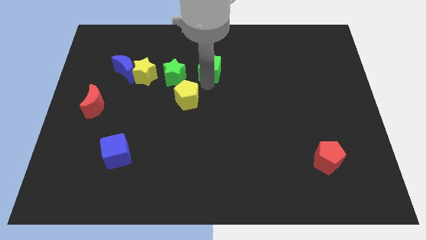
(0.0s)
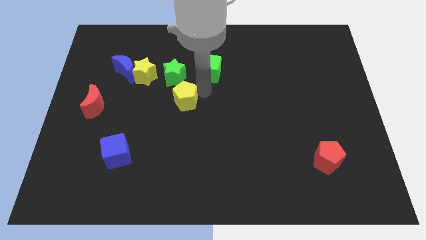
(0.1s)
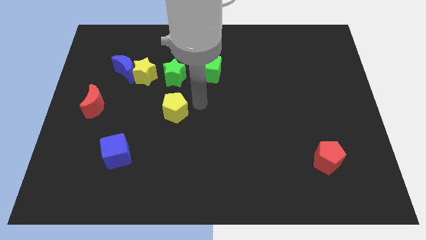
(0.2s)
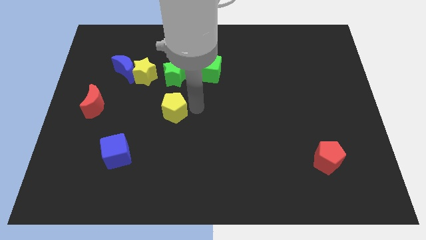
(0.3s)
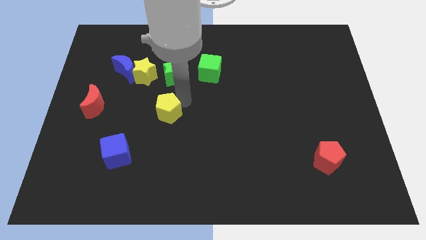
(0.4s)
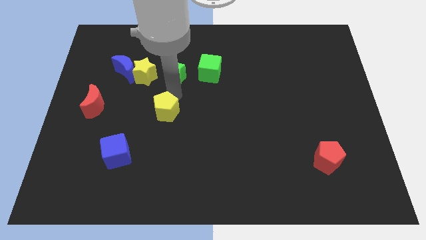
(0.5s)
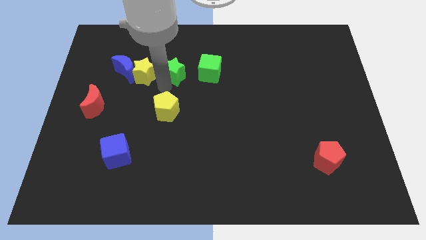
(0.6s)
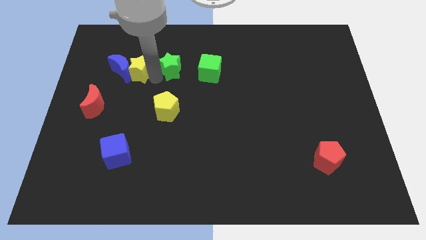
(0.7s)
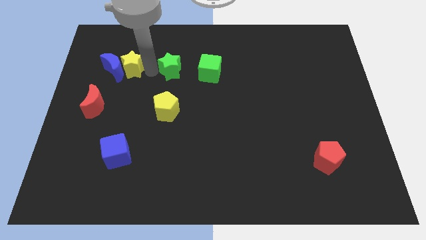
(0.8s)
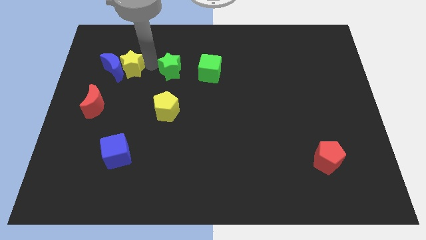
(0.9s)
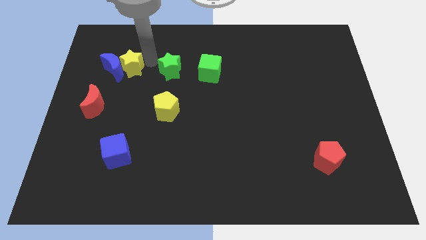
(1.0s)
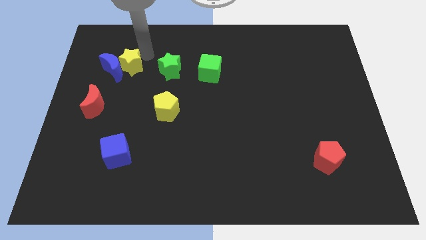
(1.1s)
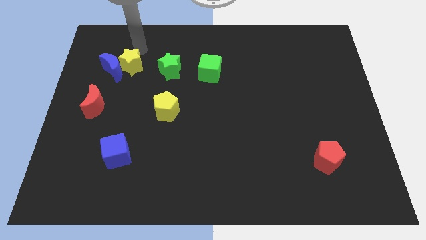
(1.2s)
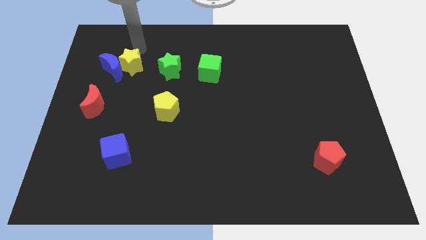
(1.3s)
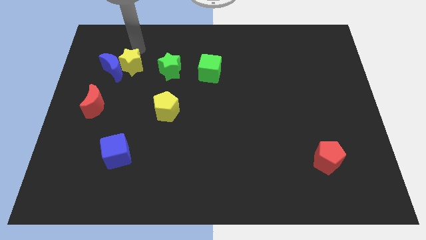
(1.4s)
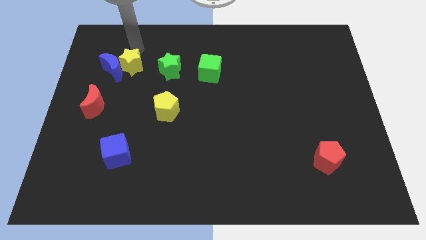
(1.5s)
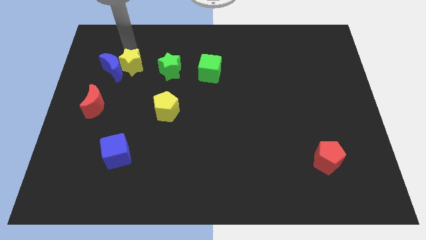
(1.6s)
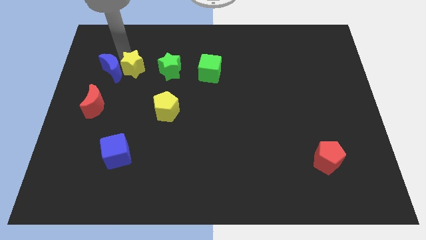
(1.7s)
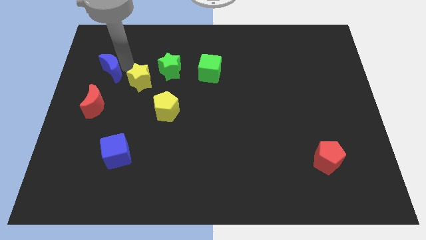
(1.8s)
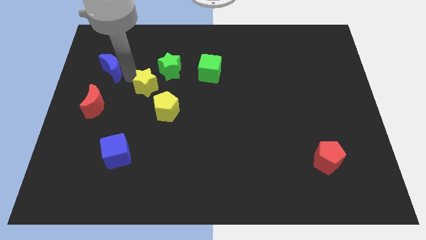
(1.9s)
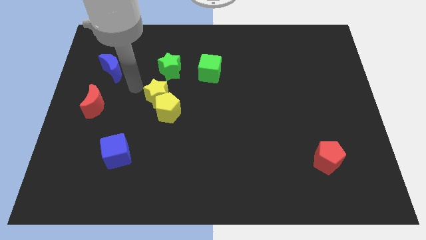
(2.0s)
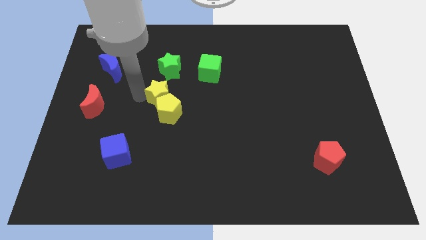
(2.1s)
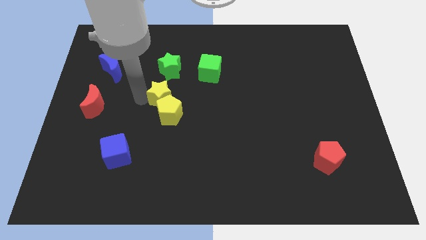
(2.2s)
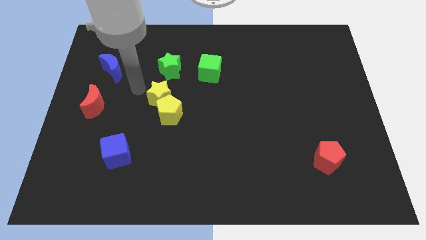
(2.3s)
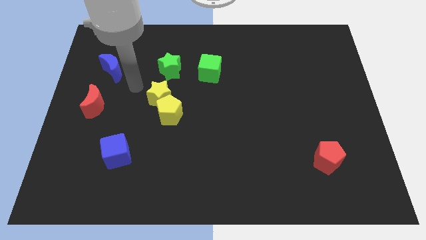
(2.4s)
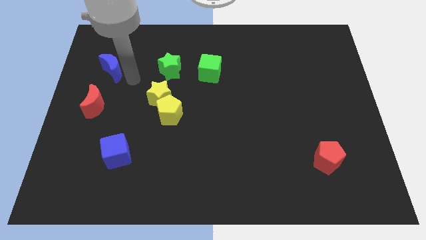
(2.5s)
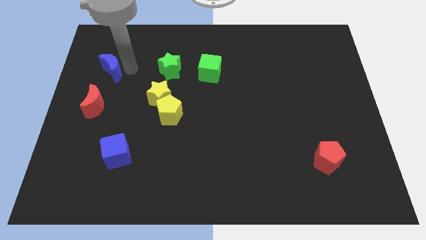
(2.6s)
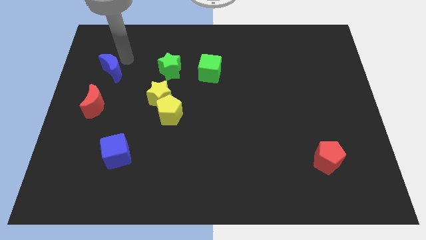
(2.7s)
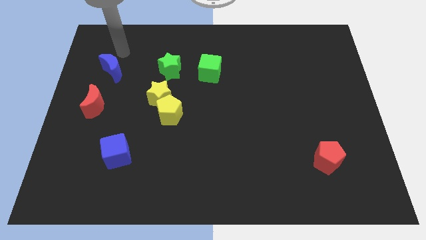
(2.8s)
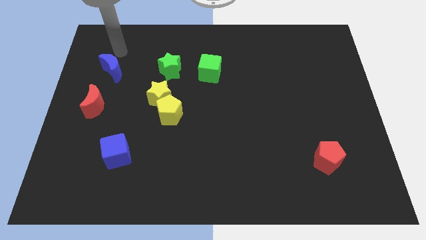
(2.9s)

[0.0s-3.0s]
push the yellow star into the yellow pentagon

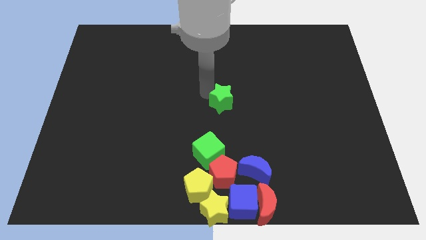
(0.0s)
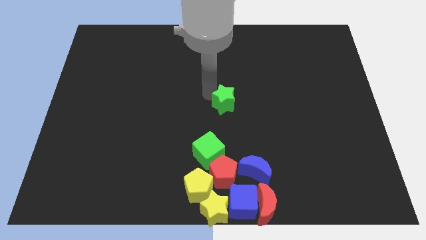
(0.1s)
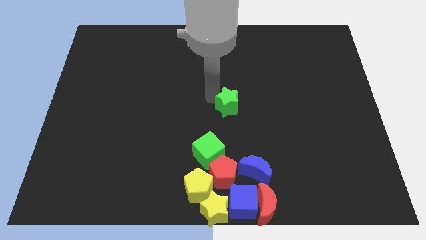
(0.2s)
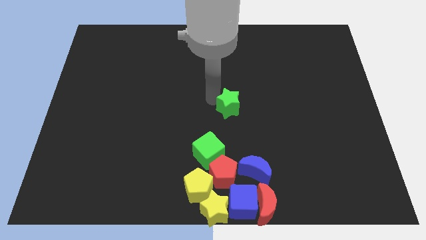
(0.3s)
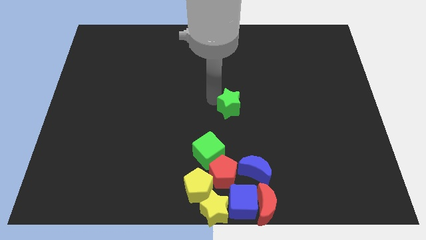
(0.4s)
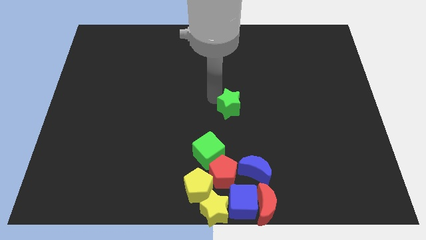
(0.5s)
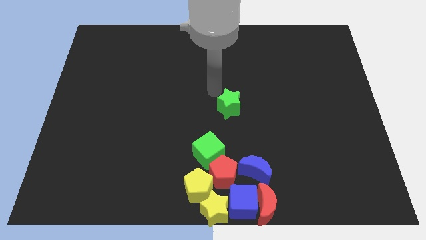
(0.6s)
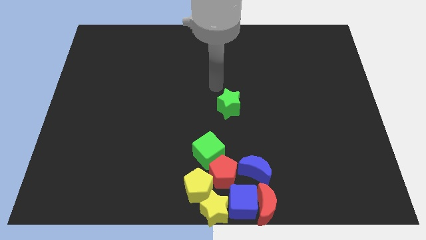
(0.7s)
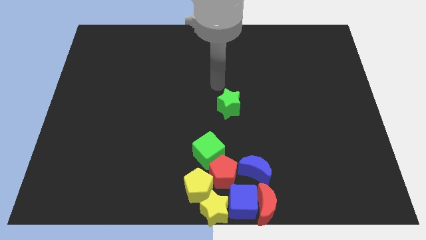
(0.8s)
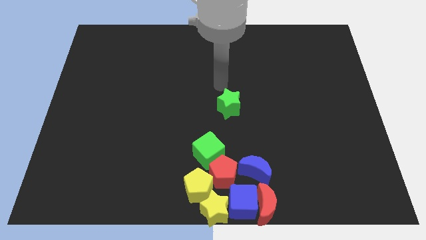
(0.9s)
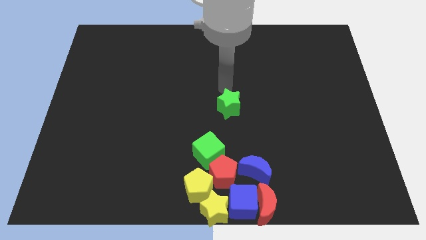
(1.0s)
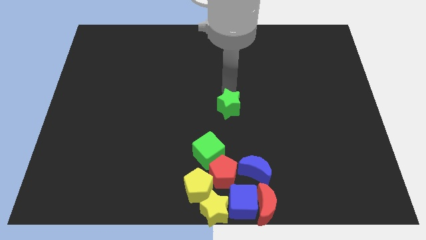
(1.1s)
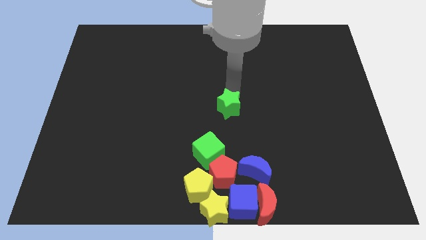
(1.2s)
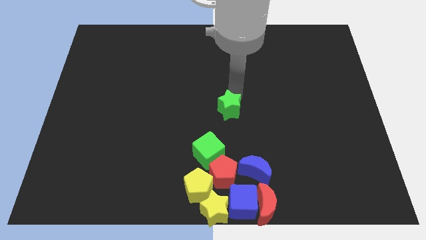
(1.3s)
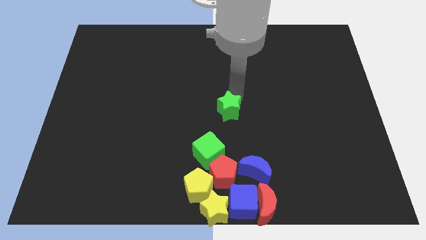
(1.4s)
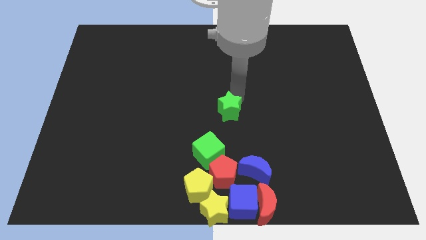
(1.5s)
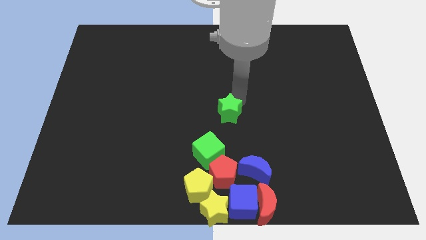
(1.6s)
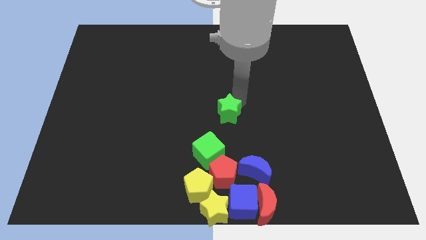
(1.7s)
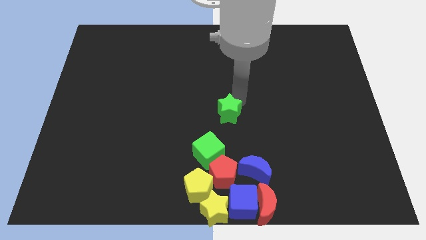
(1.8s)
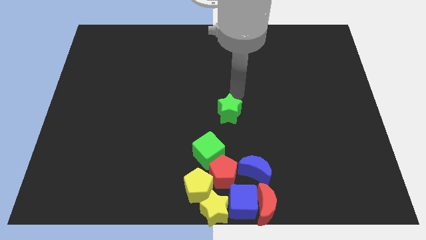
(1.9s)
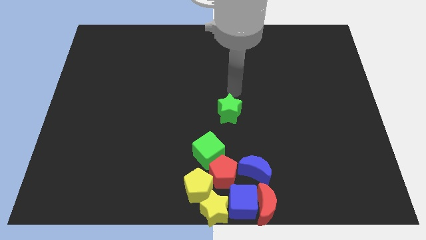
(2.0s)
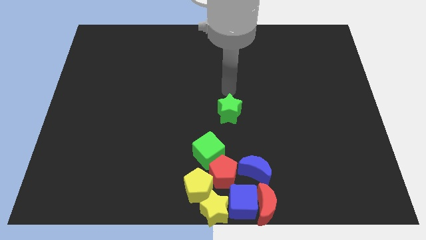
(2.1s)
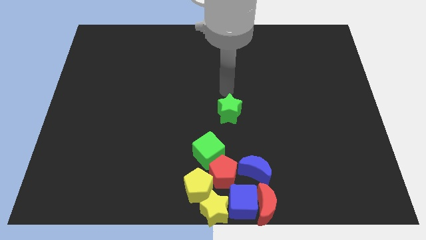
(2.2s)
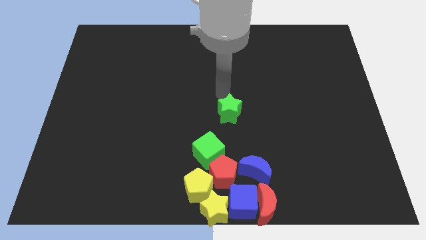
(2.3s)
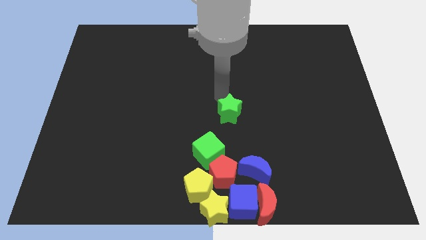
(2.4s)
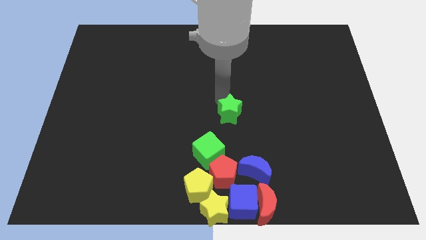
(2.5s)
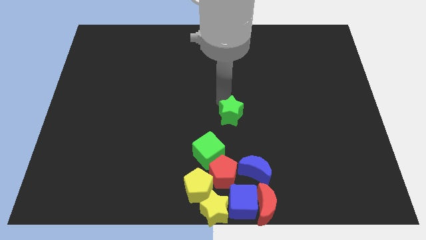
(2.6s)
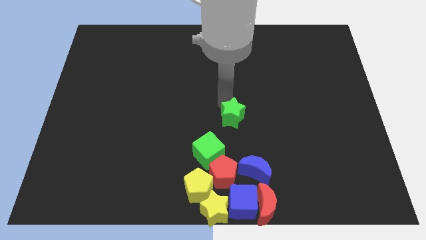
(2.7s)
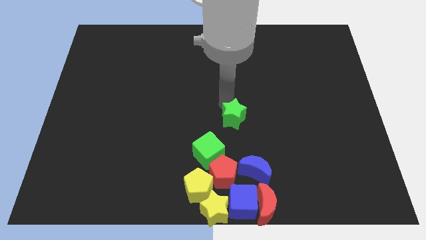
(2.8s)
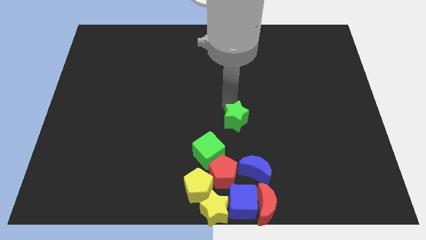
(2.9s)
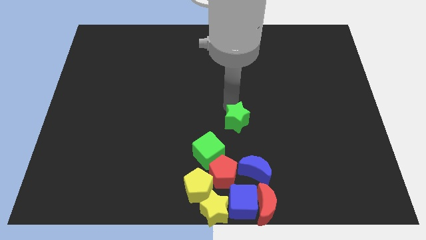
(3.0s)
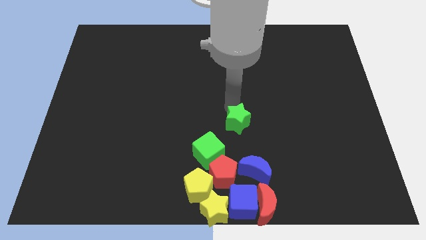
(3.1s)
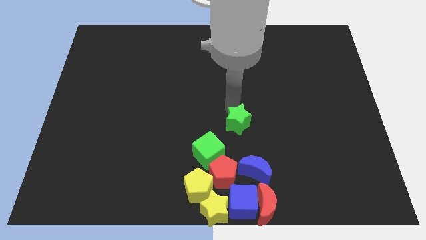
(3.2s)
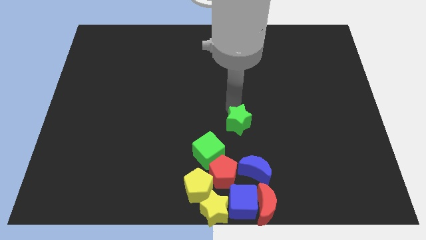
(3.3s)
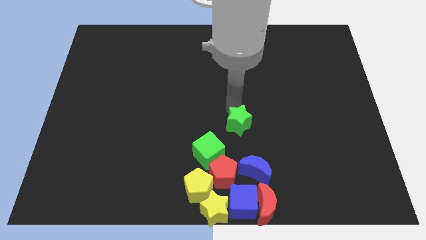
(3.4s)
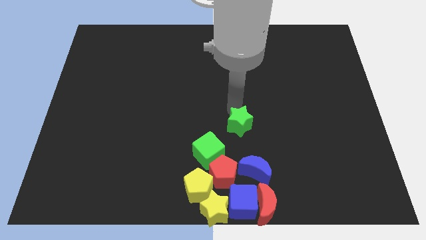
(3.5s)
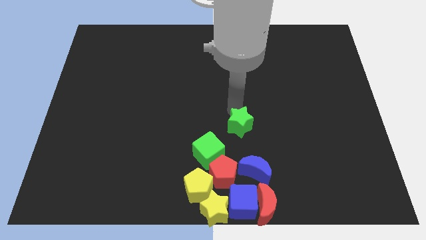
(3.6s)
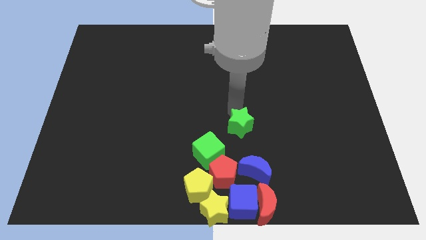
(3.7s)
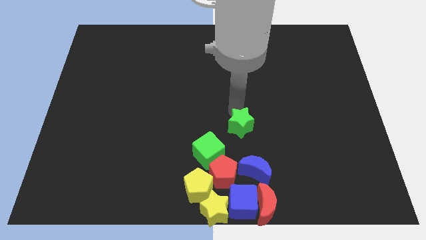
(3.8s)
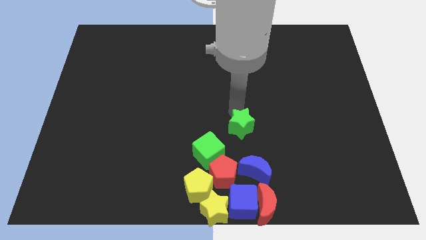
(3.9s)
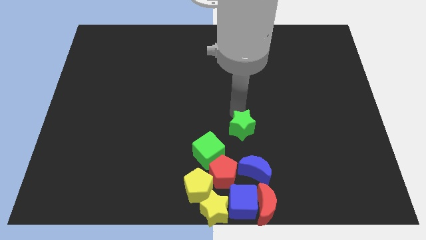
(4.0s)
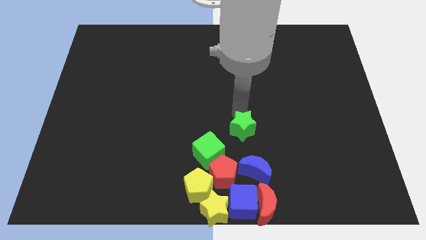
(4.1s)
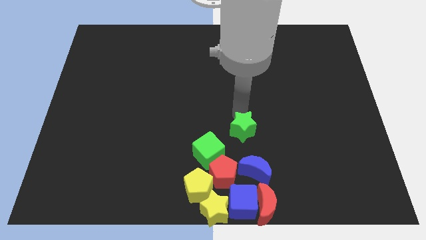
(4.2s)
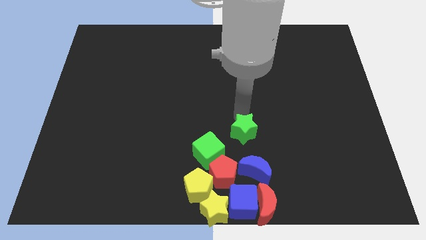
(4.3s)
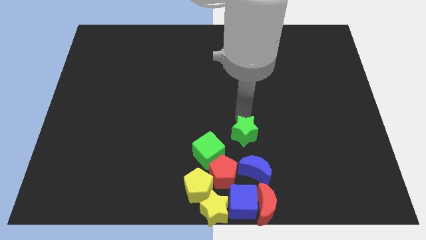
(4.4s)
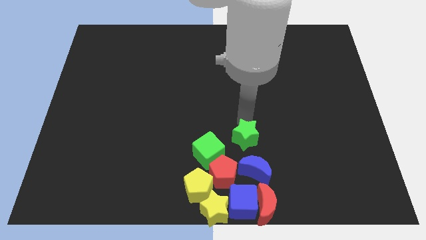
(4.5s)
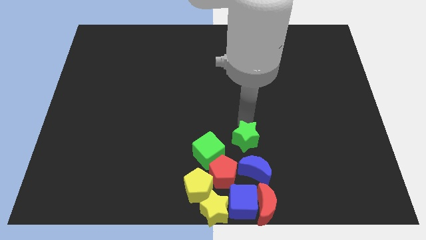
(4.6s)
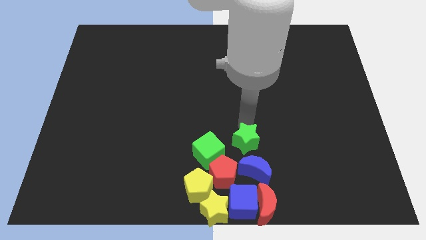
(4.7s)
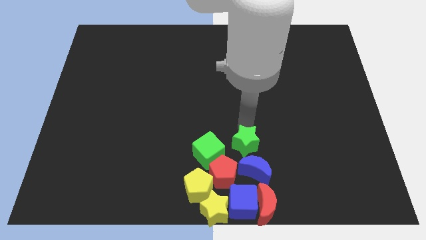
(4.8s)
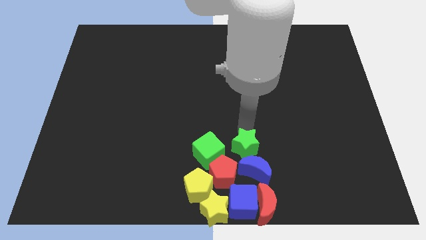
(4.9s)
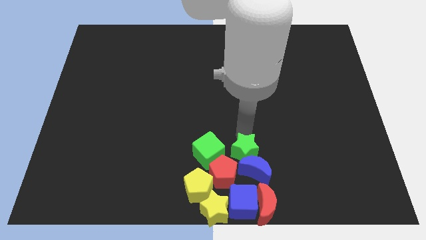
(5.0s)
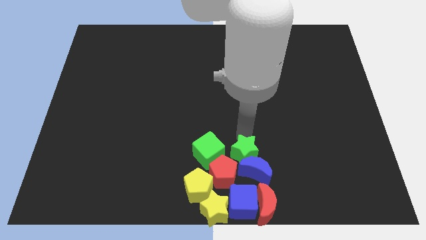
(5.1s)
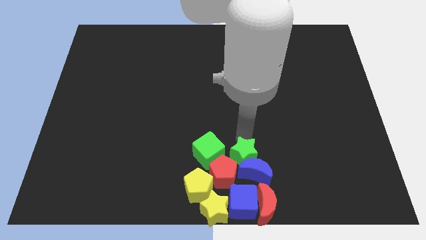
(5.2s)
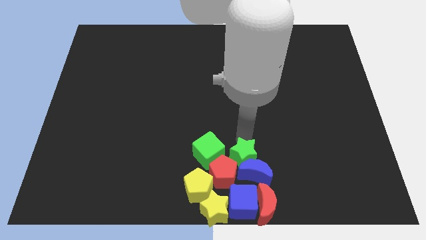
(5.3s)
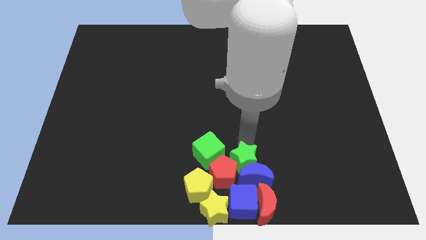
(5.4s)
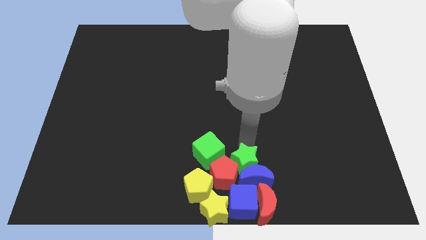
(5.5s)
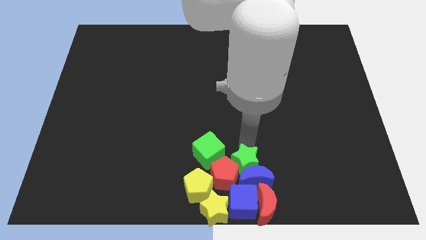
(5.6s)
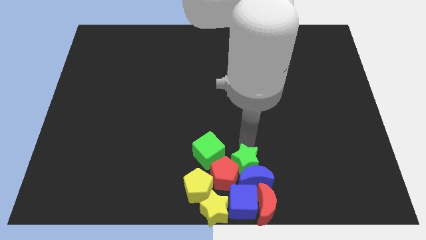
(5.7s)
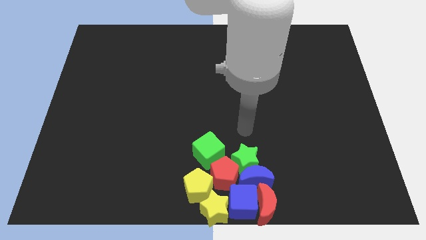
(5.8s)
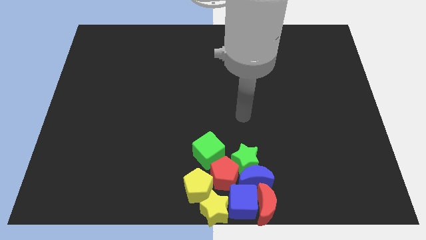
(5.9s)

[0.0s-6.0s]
group up all the blocks
